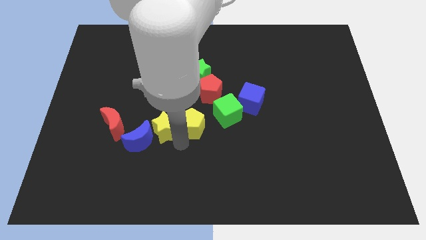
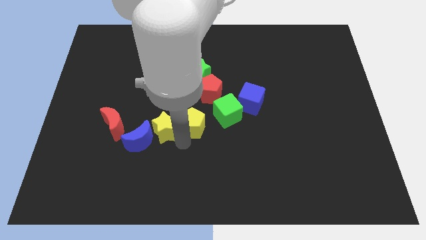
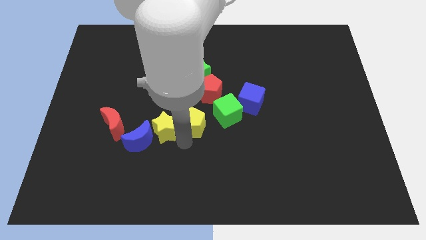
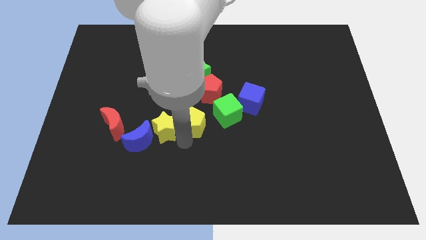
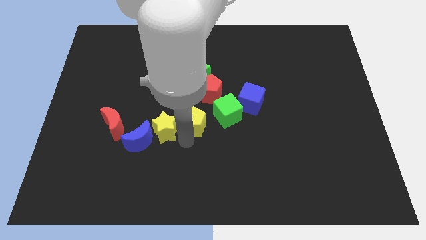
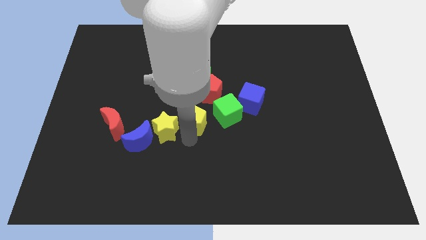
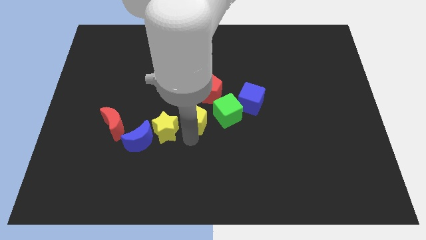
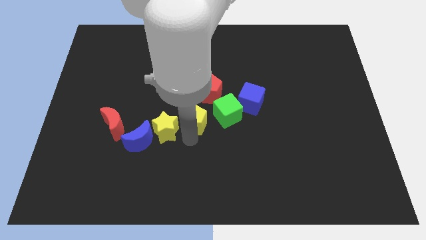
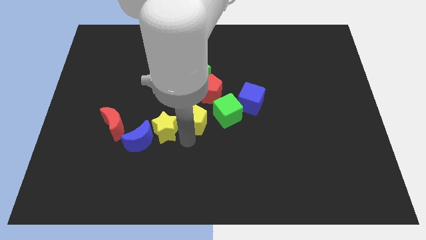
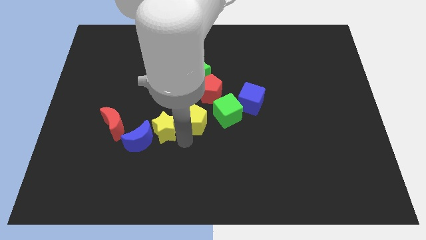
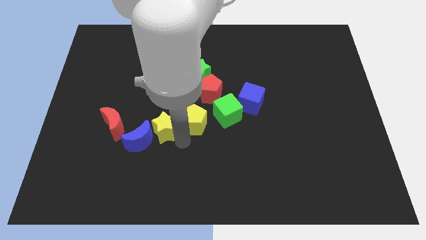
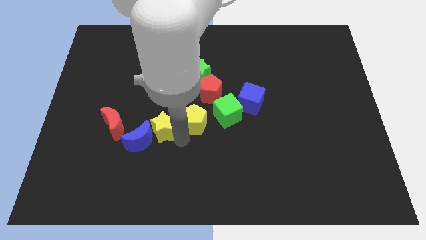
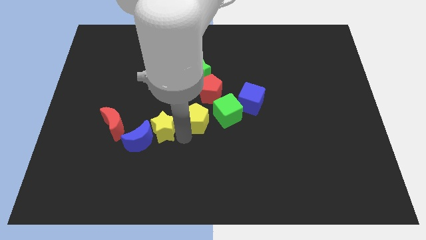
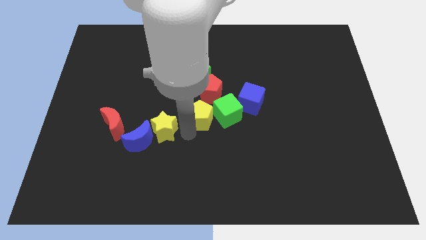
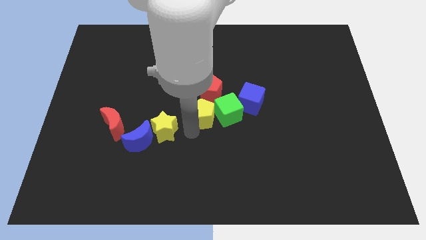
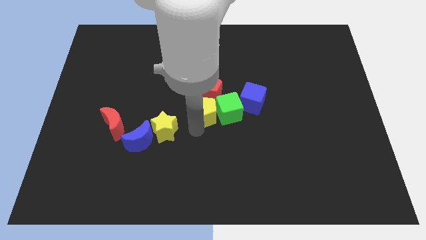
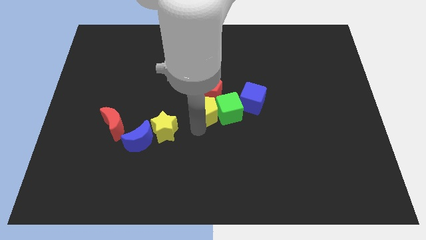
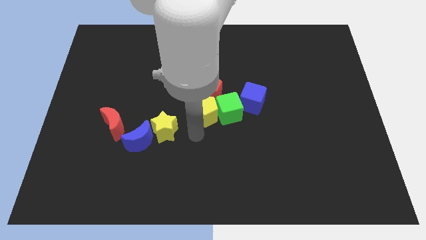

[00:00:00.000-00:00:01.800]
separate the yellow pentagon from the yellow star

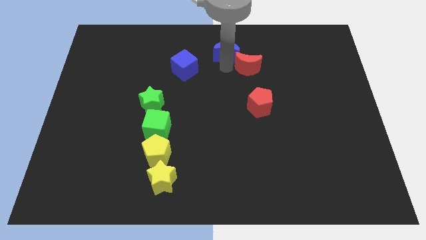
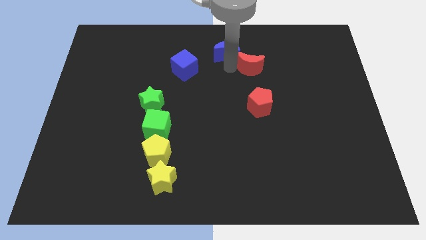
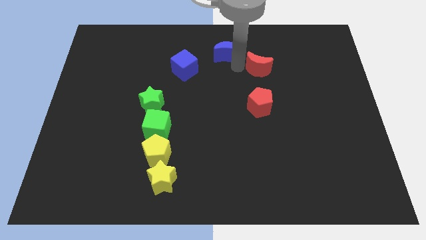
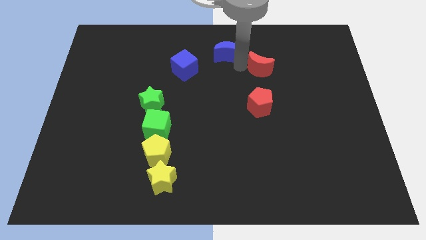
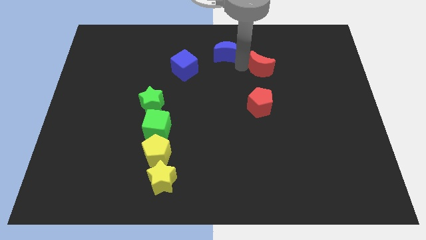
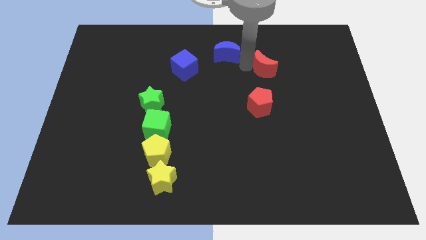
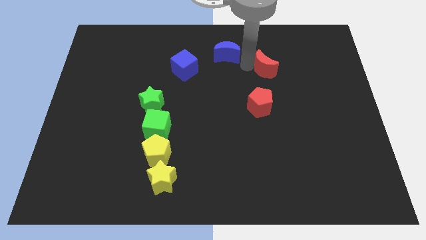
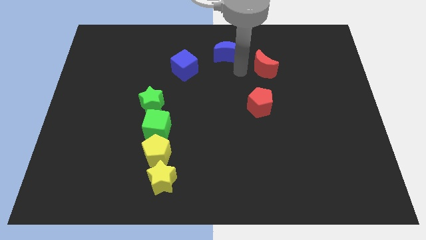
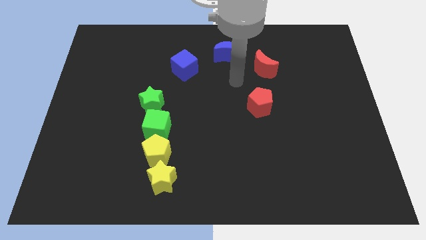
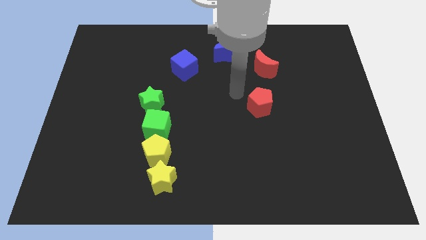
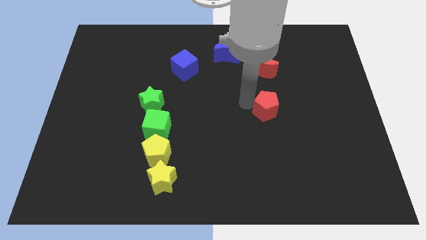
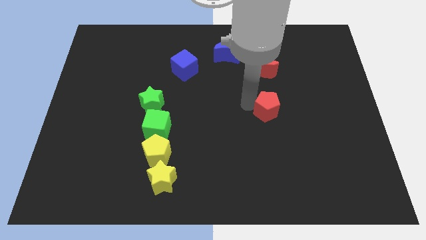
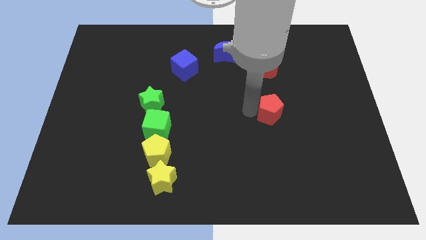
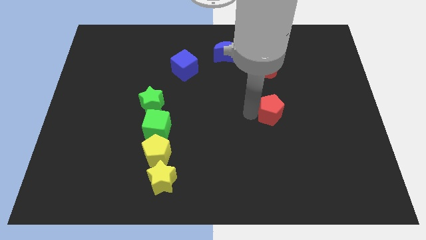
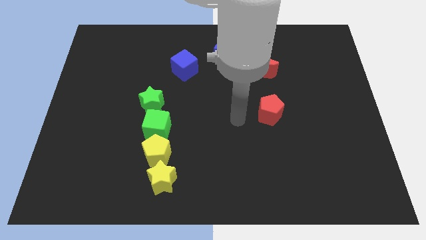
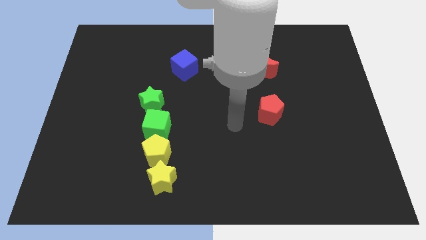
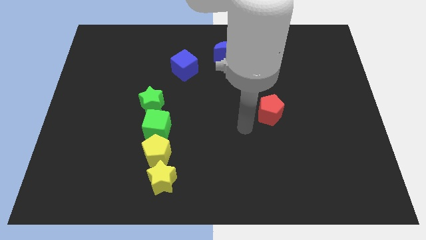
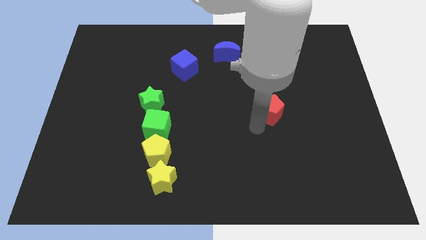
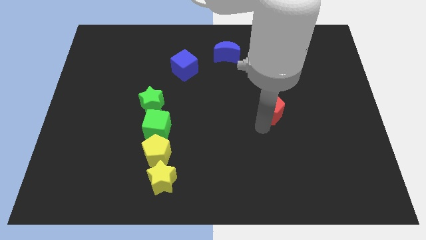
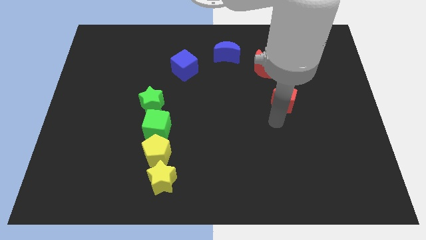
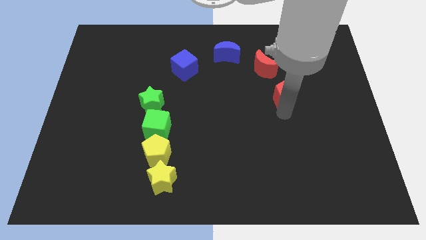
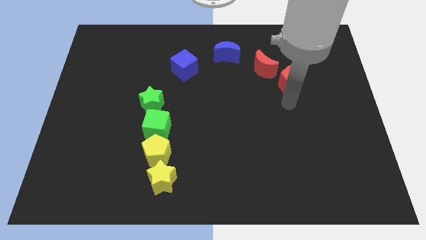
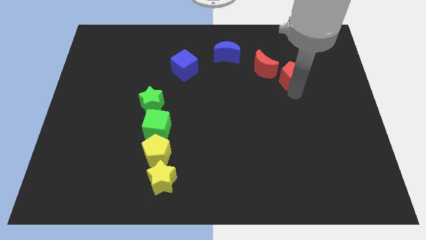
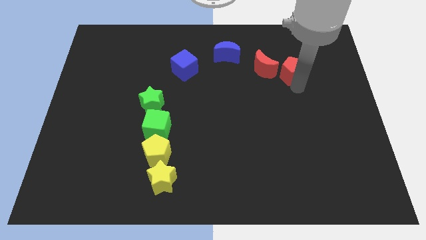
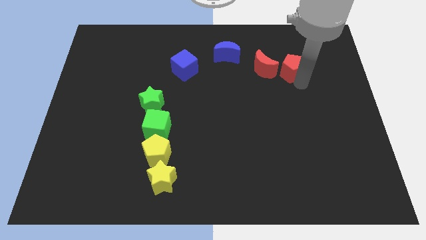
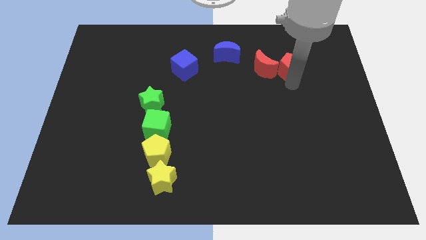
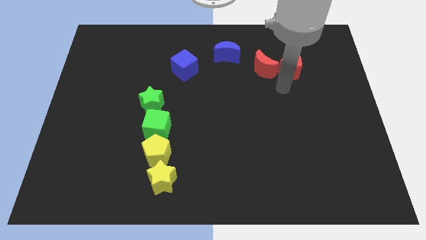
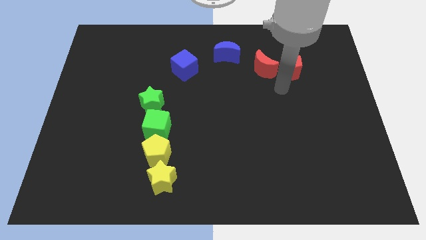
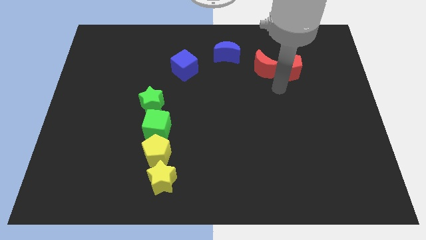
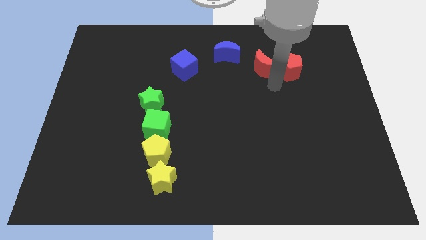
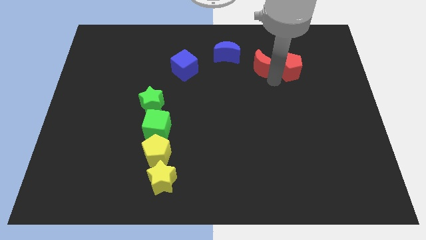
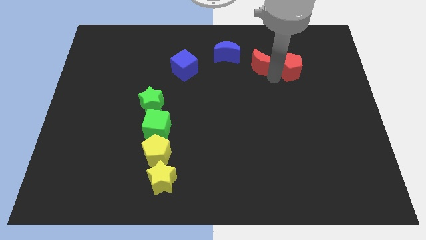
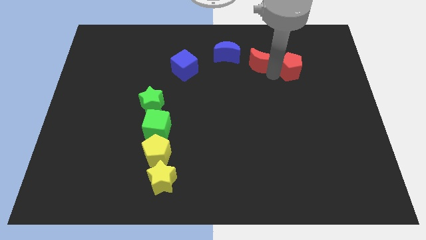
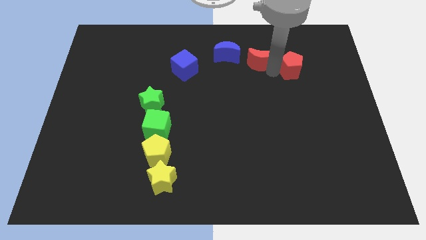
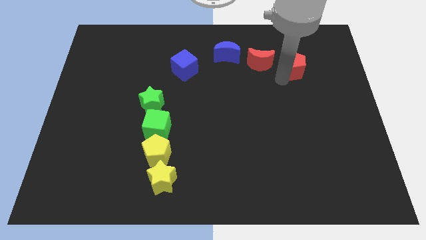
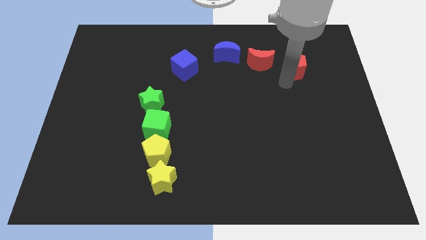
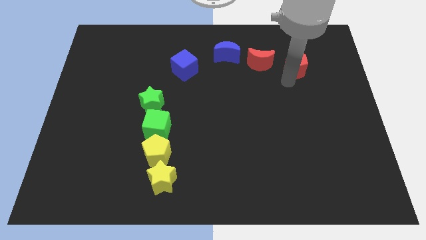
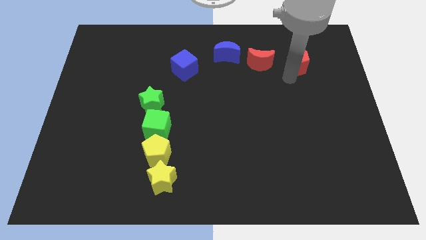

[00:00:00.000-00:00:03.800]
place the red pentagon to the right of the red moon

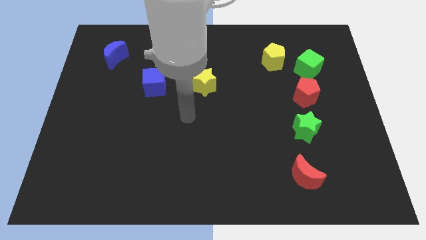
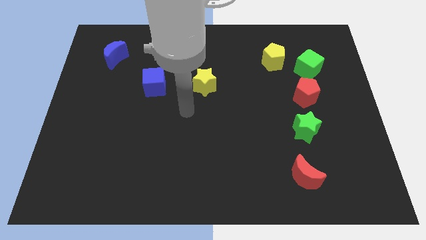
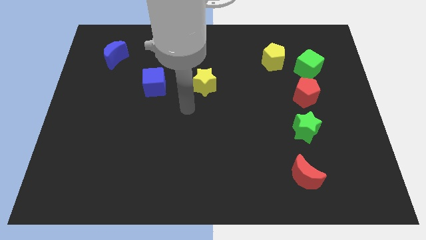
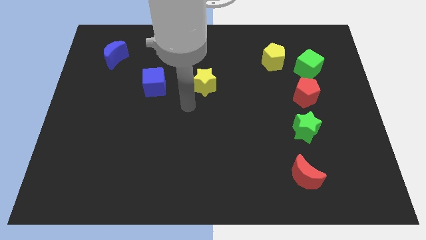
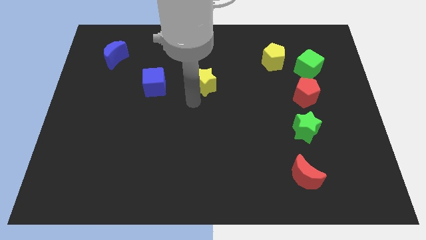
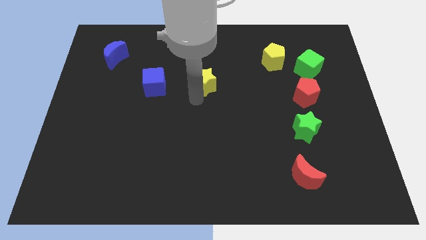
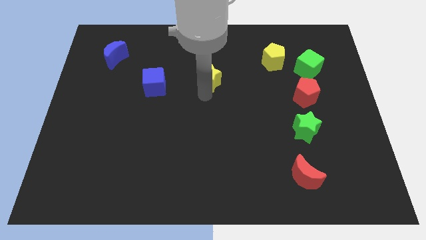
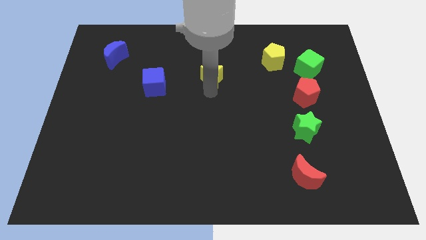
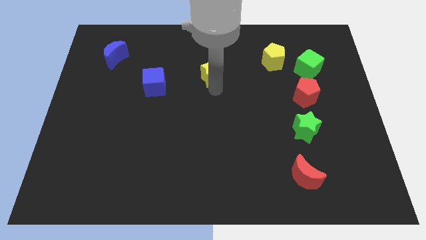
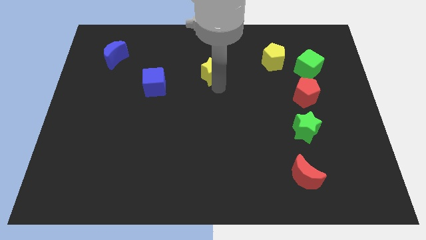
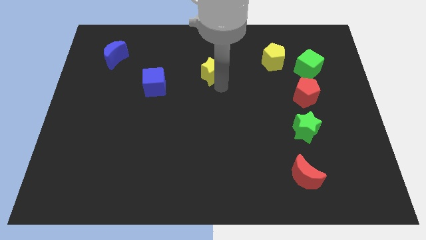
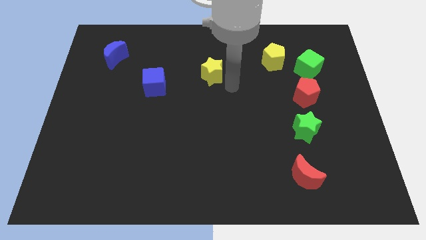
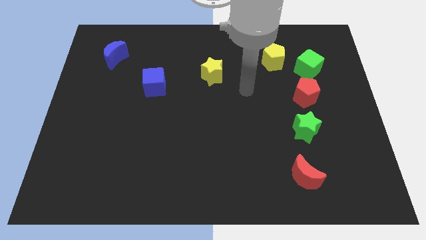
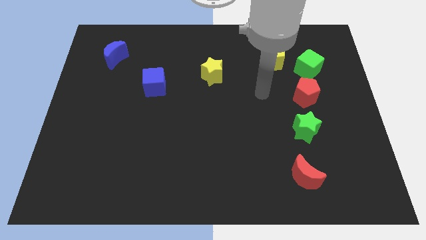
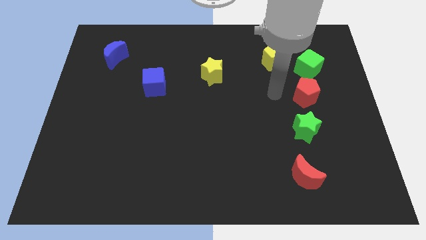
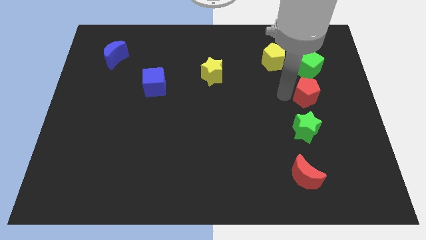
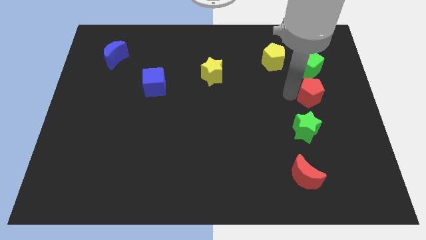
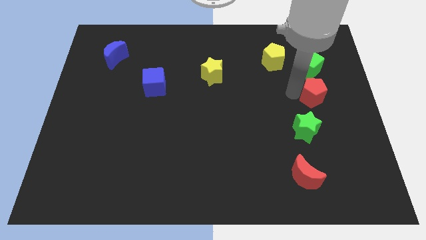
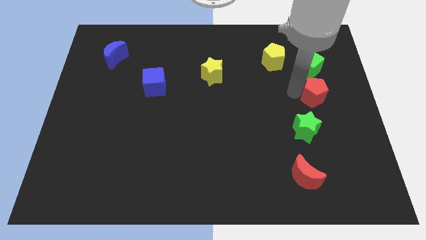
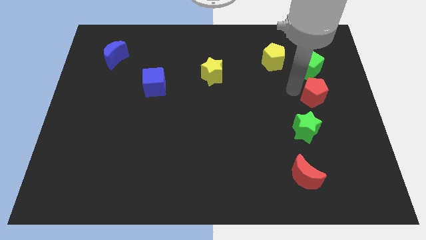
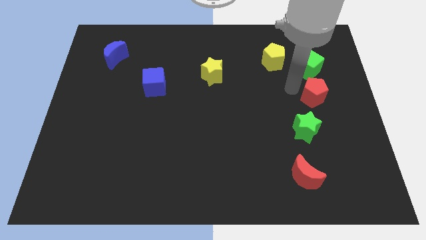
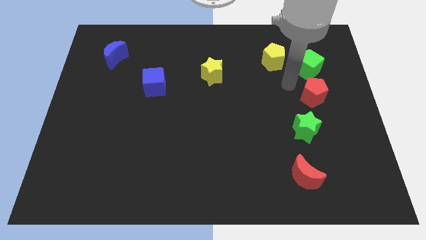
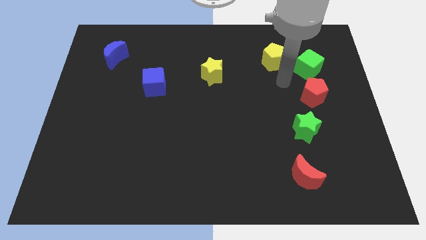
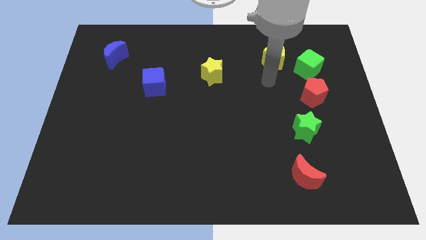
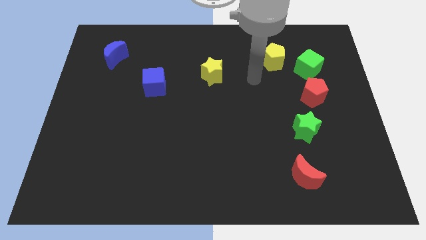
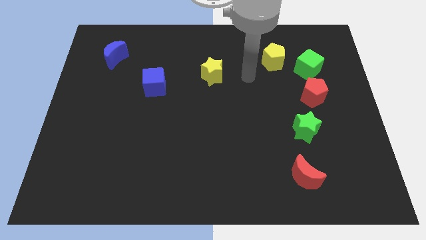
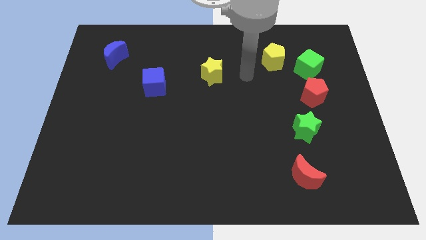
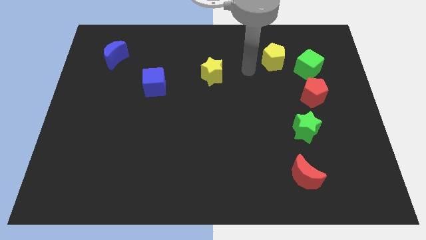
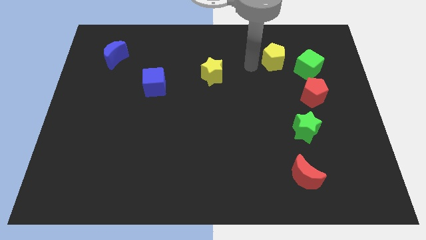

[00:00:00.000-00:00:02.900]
move red pentagon below the green cube

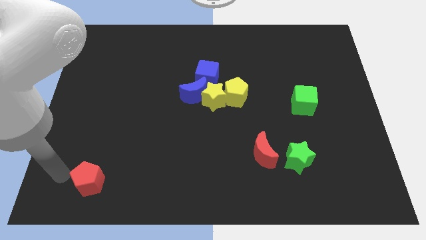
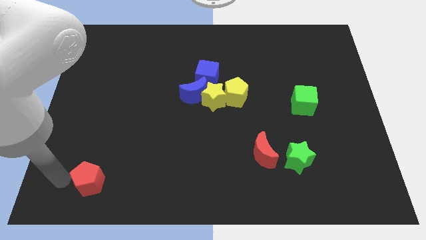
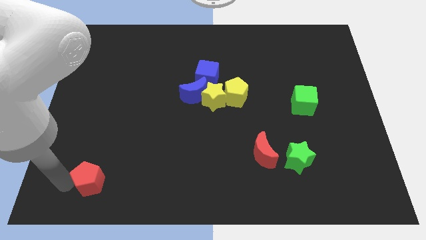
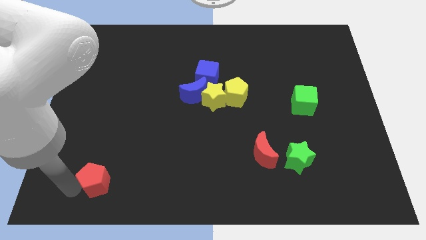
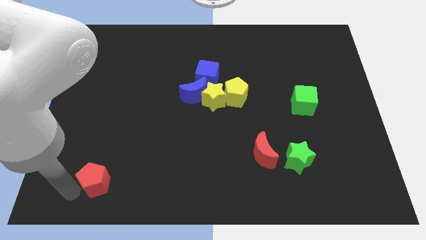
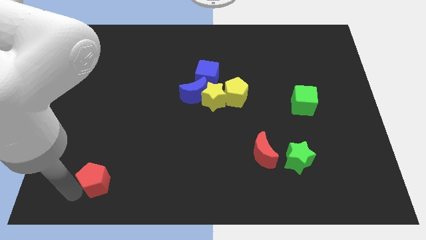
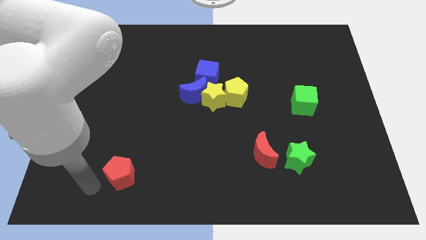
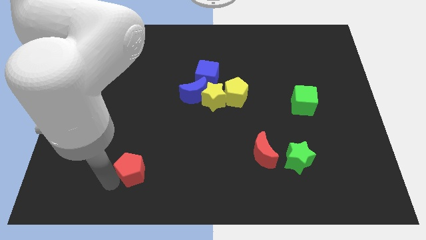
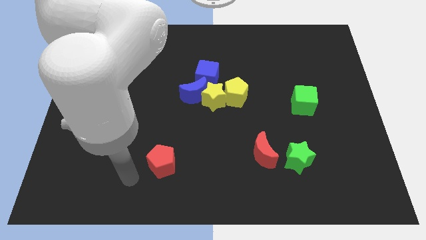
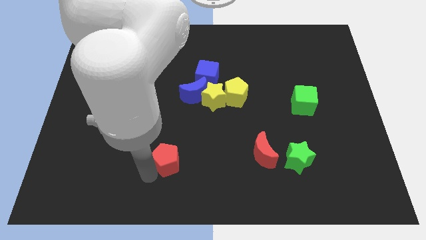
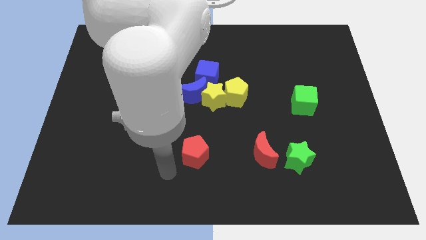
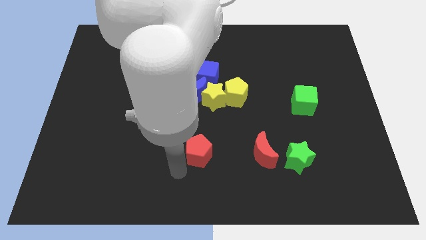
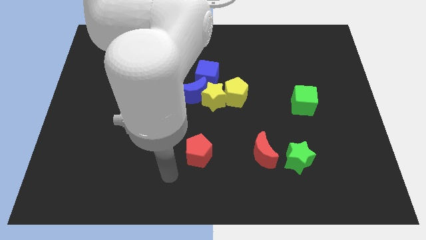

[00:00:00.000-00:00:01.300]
push red pentagon below blue crescent
